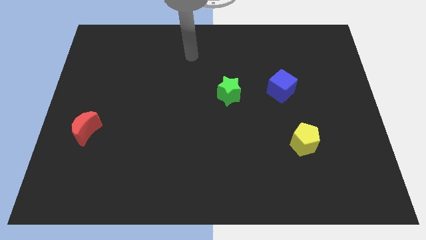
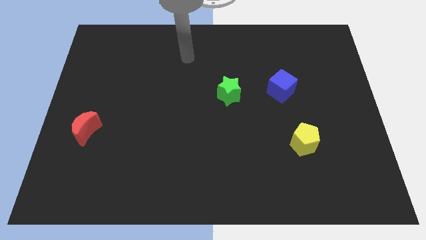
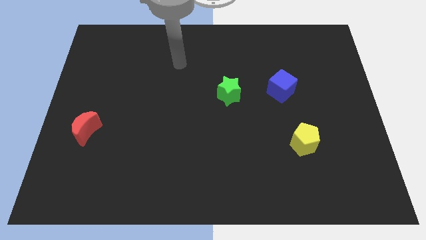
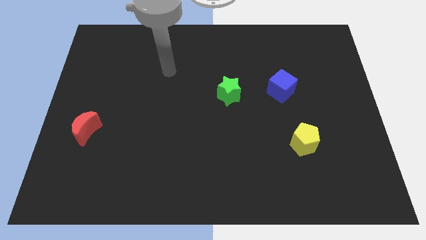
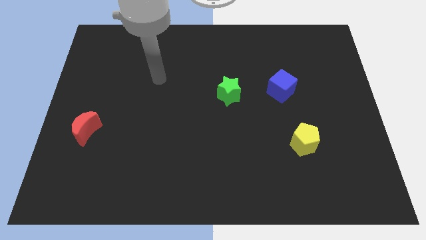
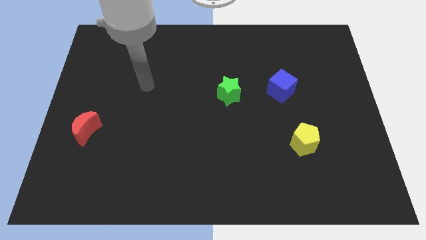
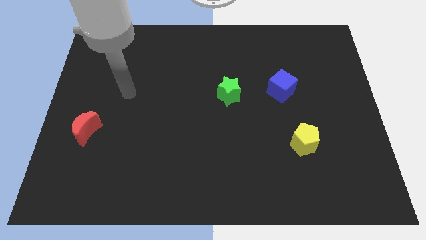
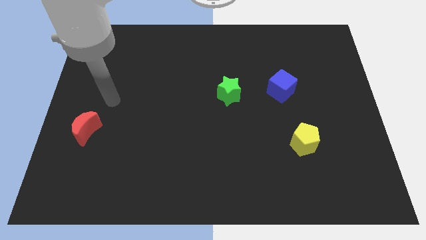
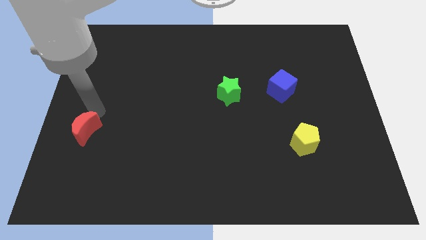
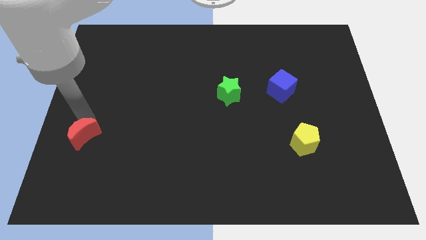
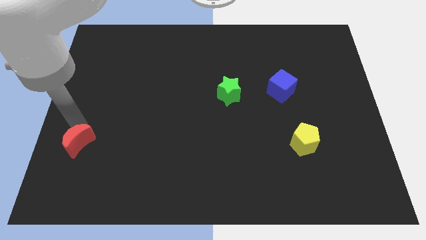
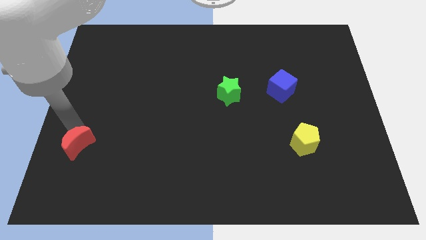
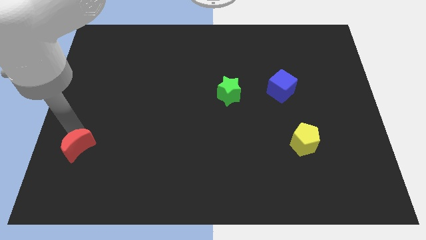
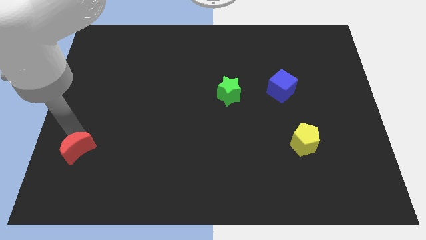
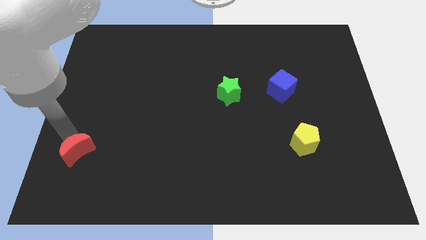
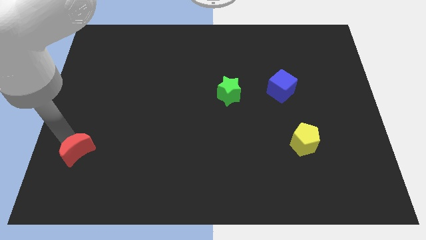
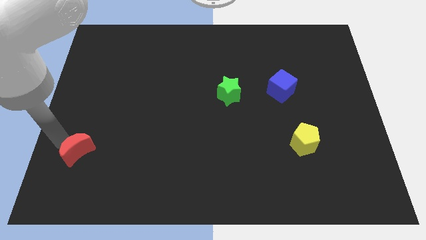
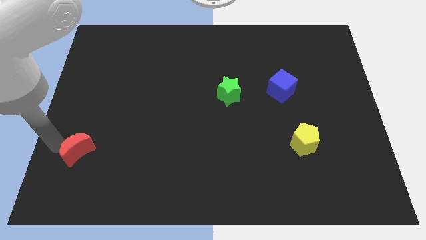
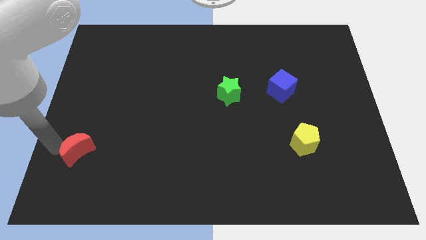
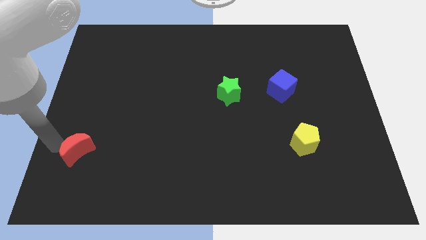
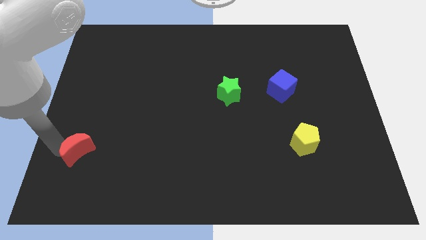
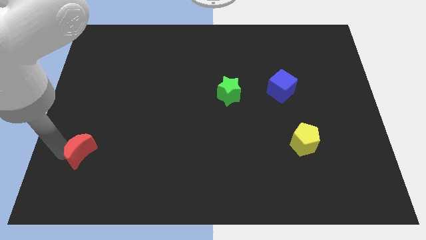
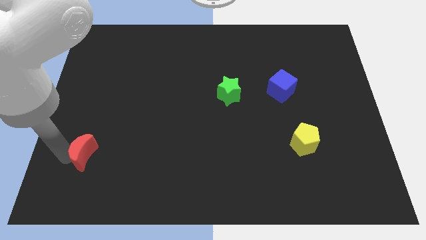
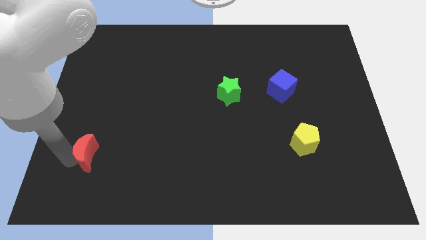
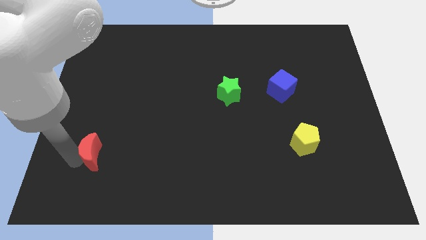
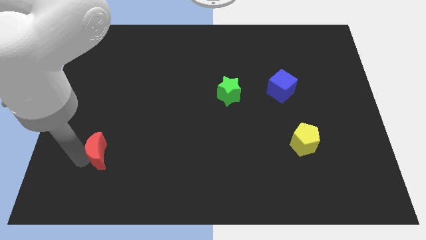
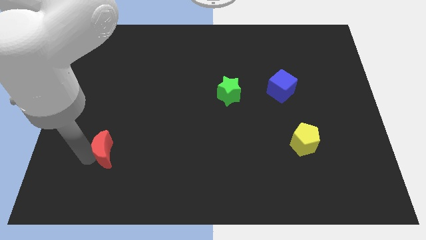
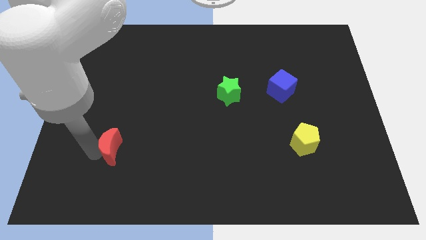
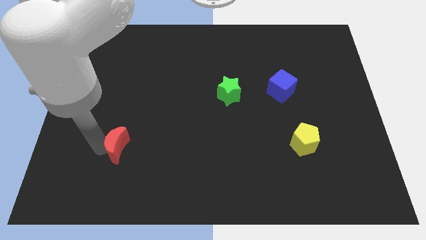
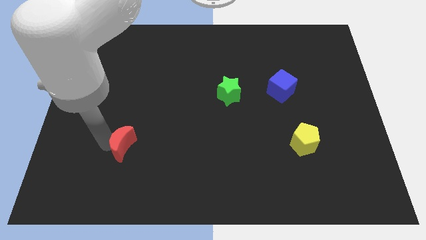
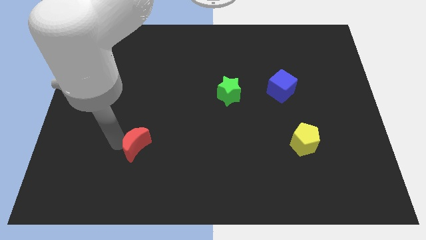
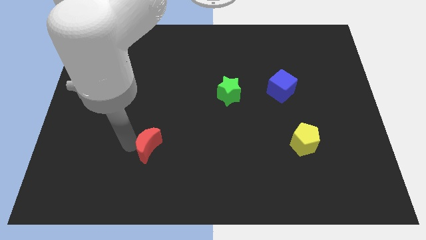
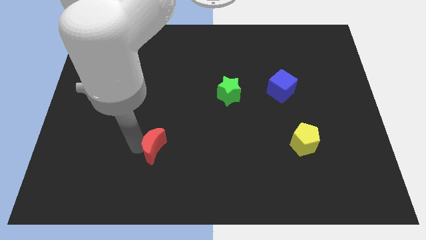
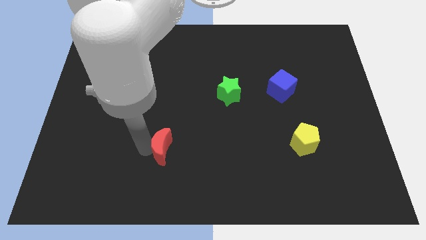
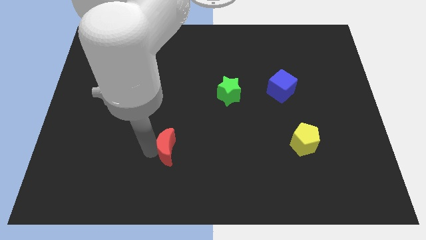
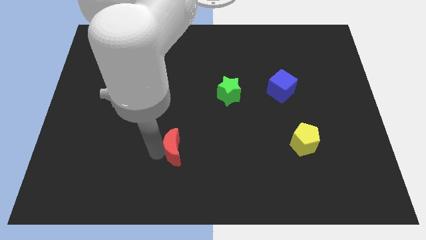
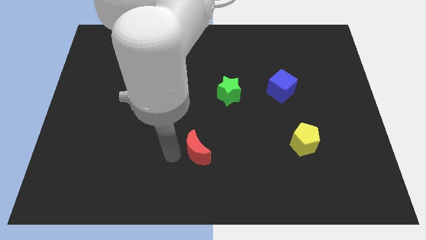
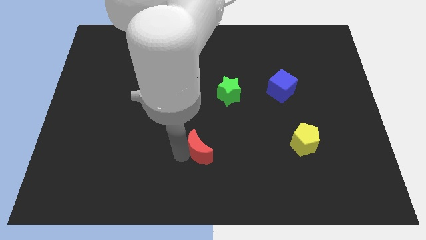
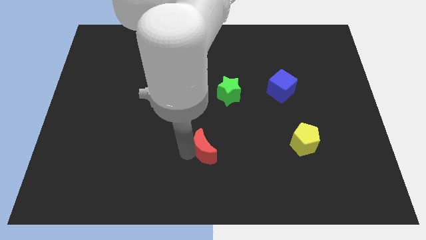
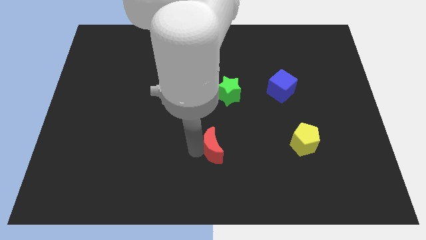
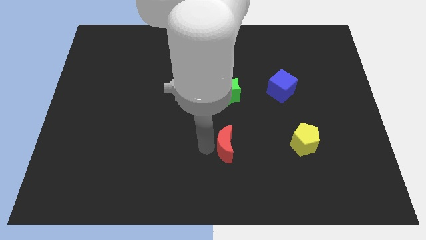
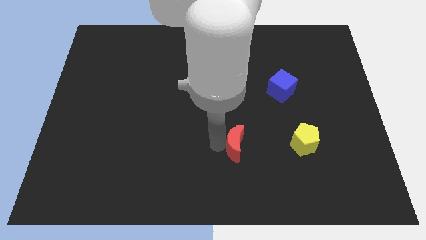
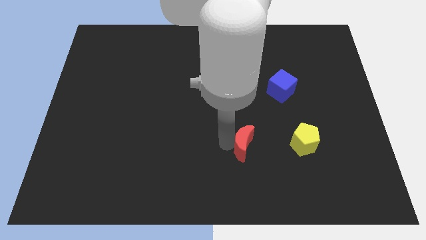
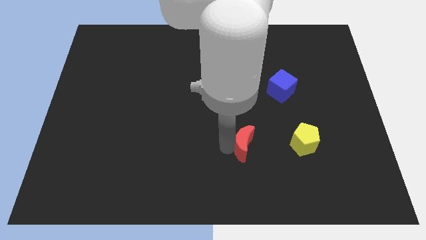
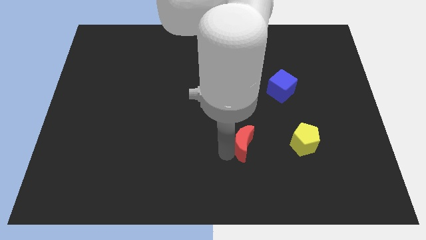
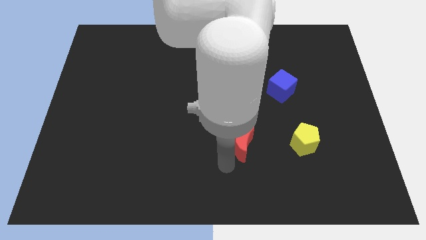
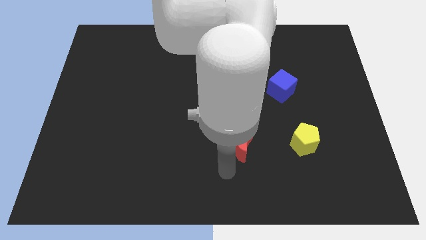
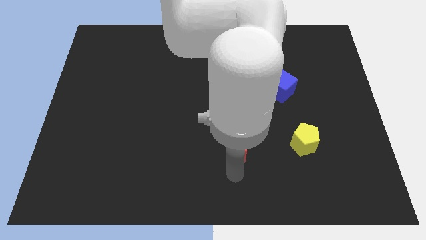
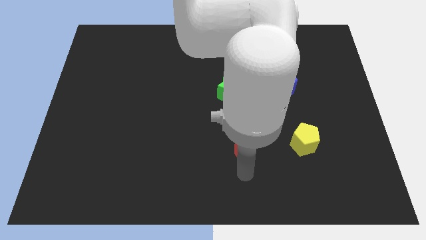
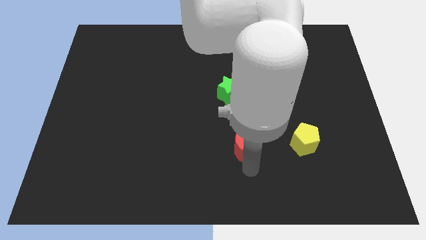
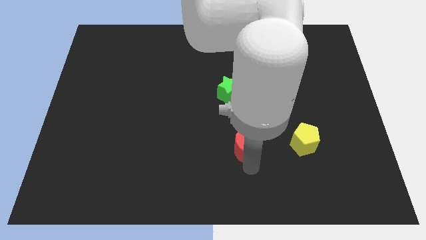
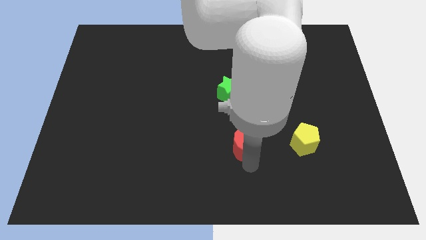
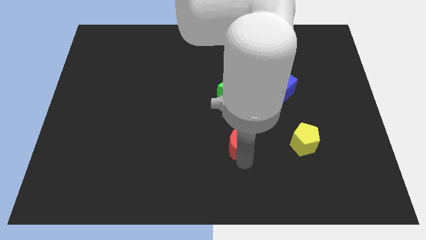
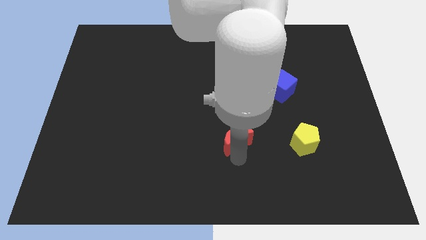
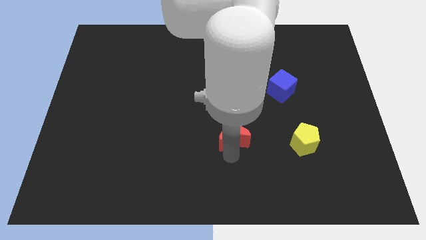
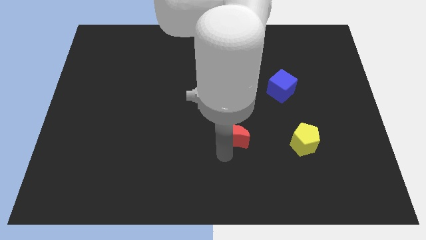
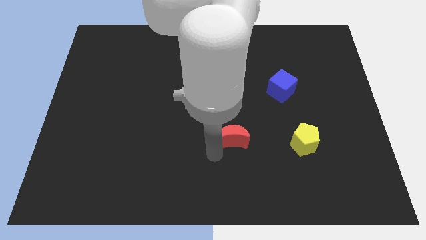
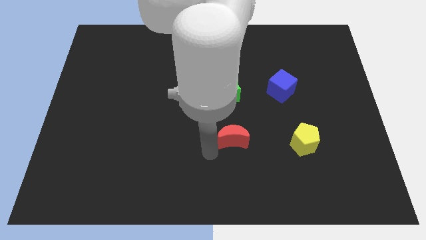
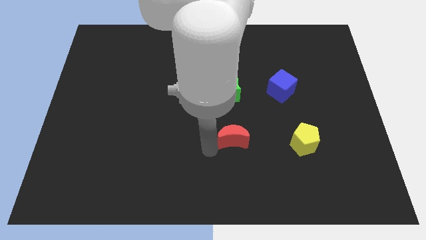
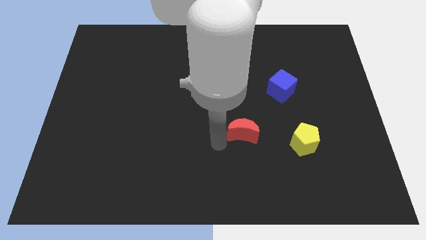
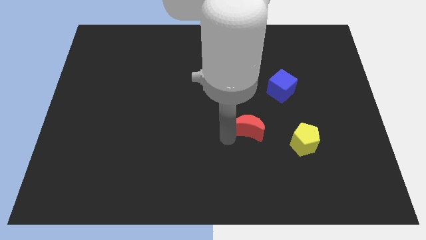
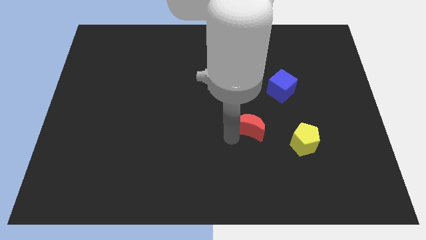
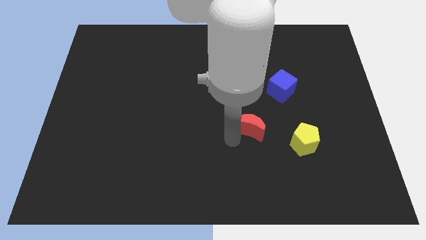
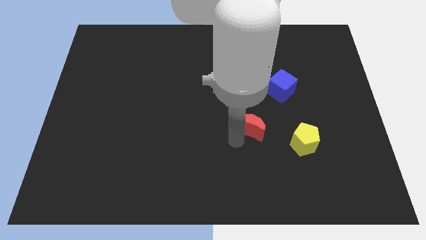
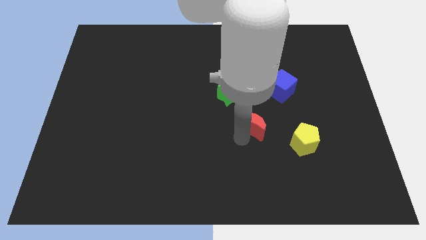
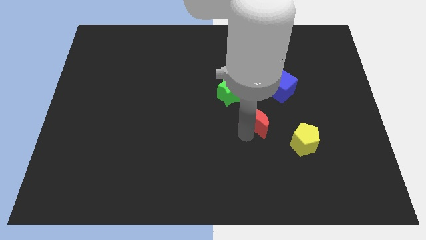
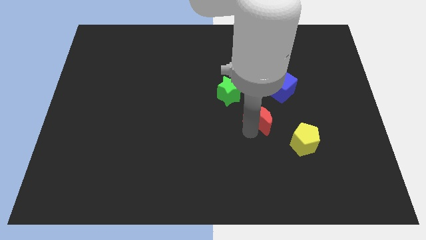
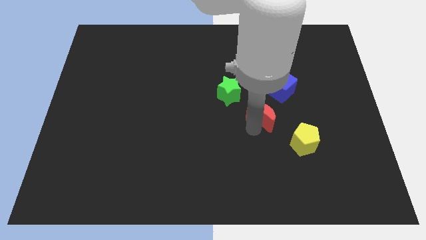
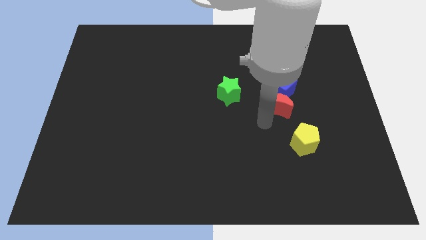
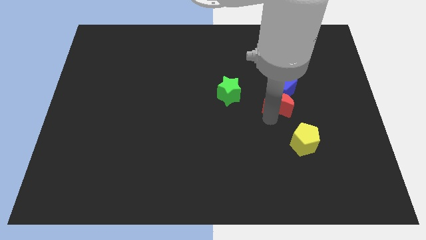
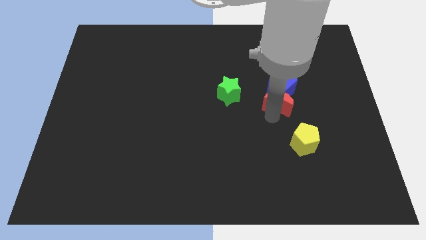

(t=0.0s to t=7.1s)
push the moon next to the blue cube

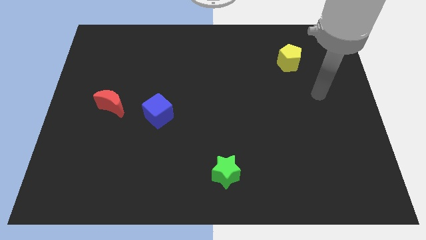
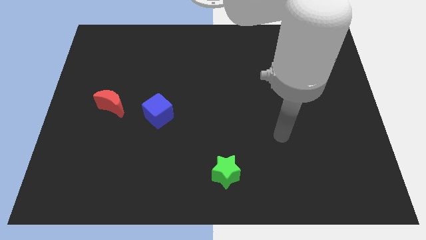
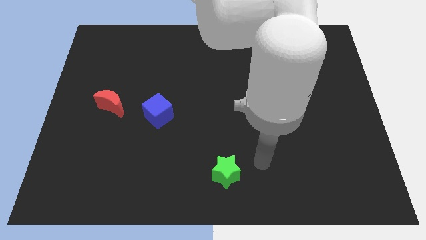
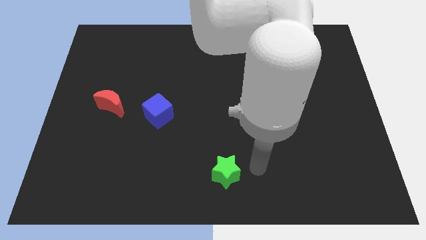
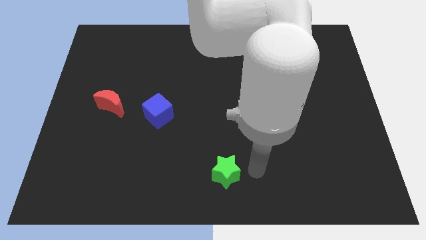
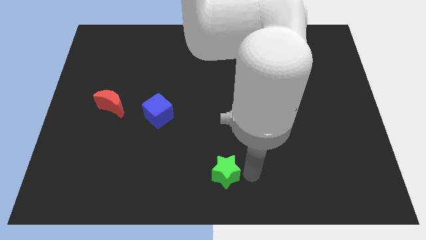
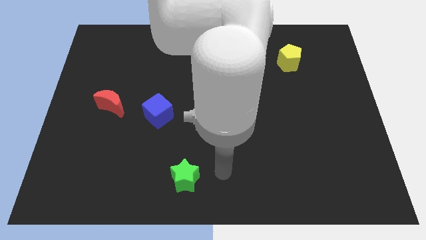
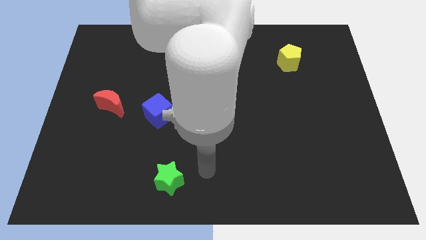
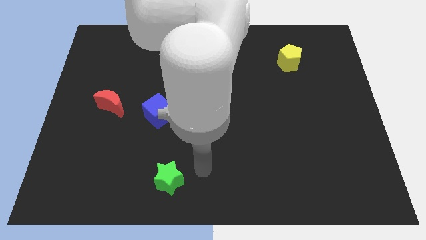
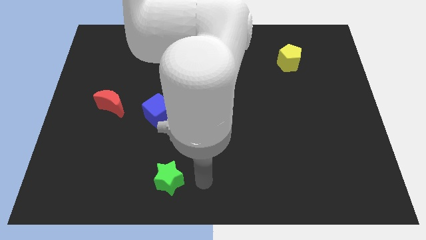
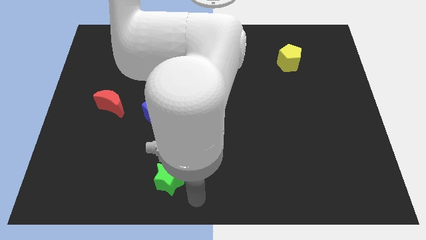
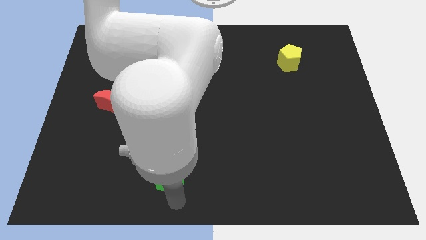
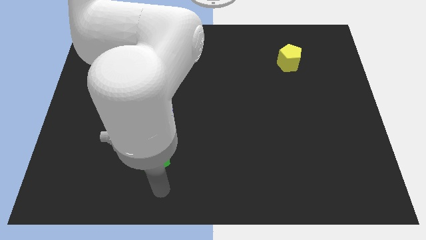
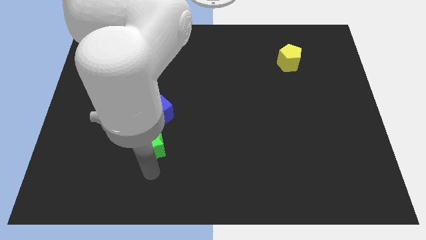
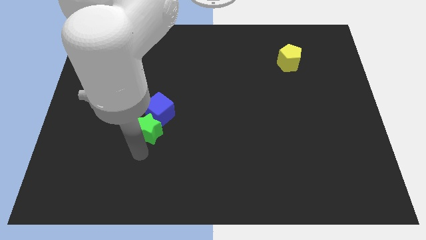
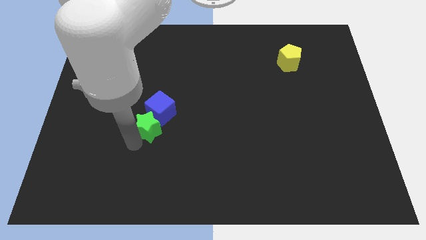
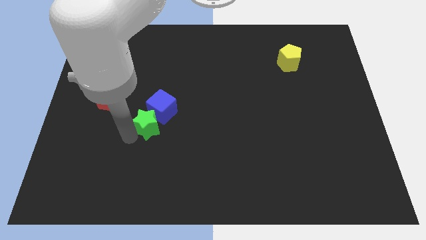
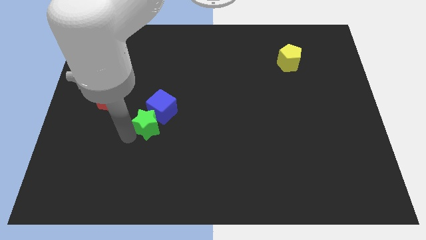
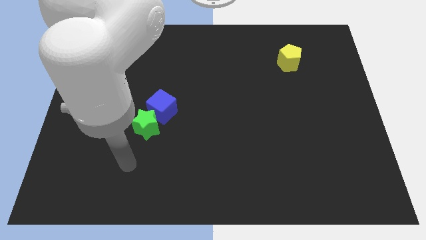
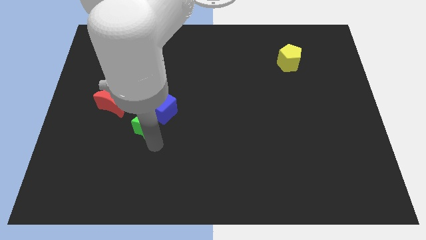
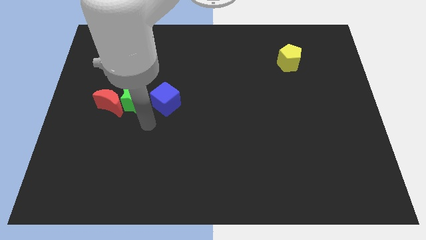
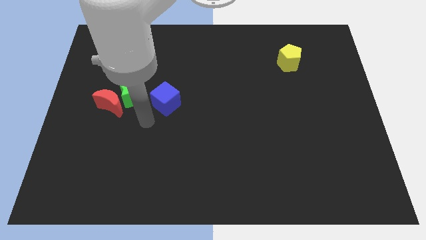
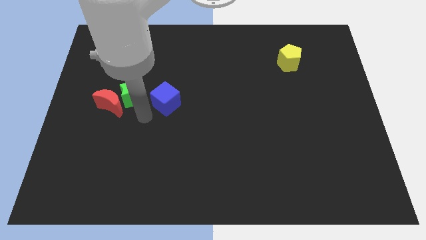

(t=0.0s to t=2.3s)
put the green block next to the red moon
